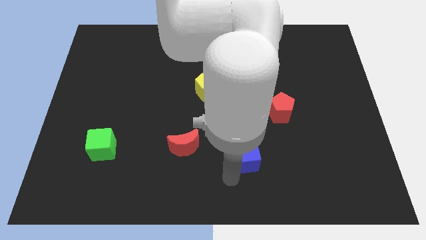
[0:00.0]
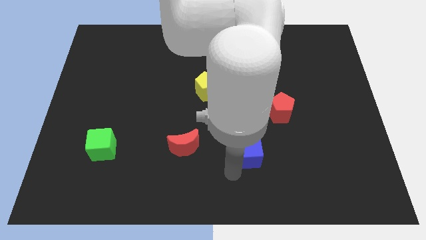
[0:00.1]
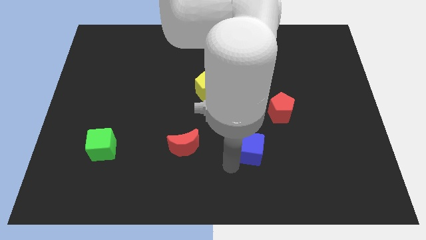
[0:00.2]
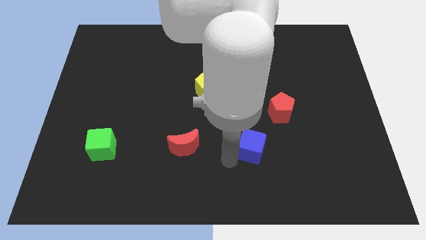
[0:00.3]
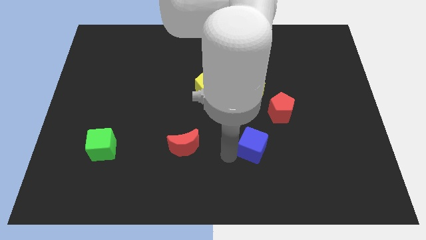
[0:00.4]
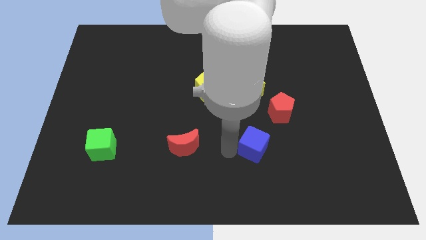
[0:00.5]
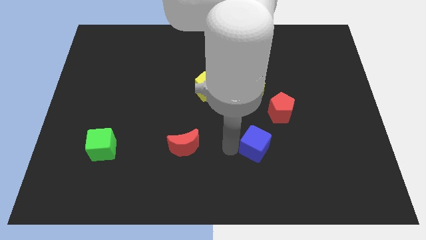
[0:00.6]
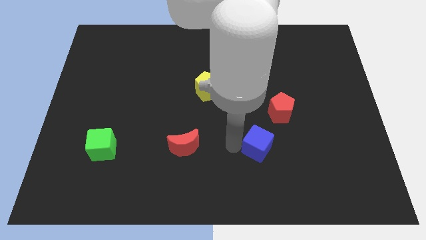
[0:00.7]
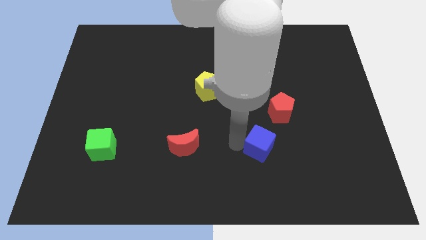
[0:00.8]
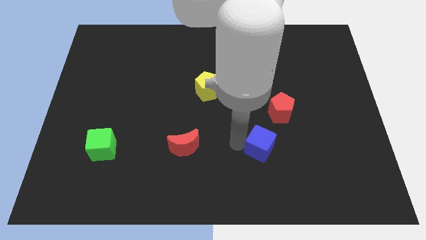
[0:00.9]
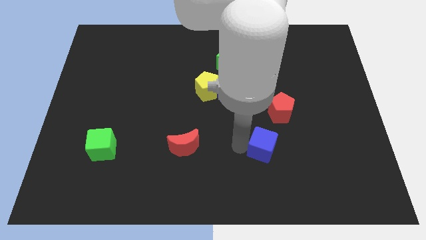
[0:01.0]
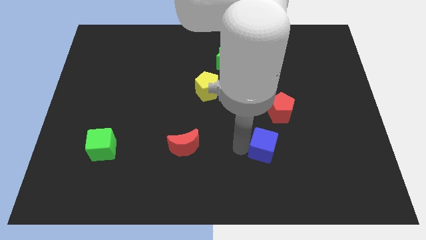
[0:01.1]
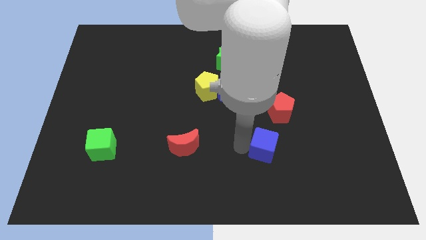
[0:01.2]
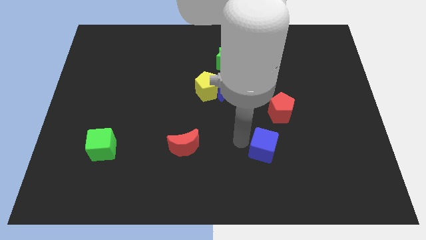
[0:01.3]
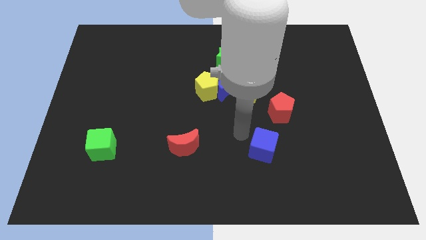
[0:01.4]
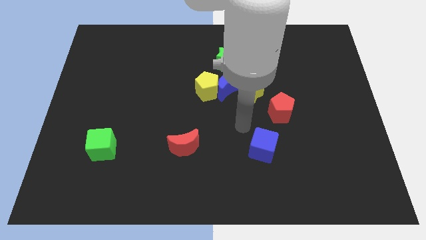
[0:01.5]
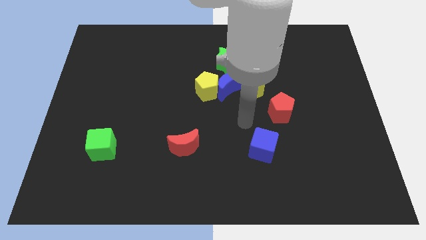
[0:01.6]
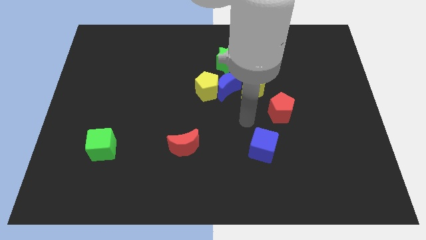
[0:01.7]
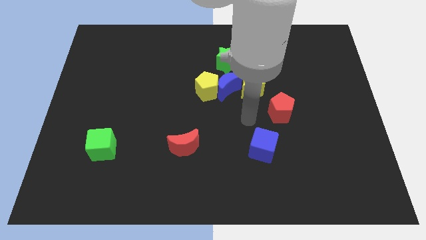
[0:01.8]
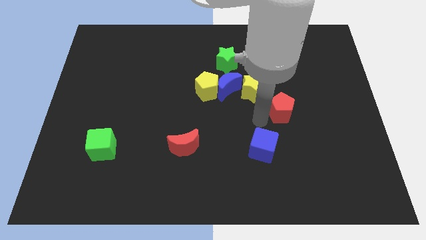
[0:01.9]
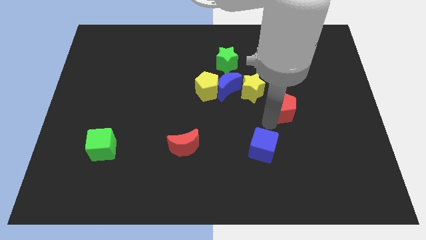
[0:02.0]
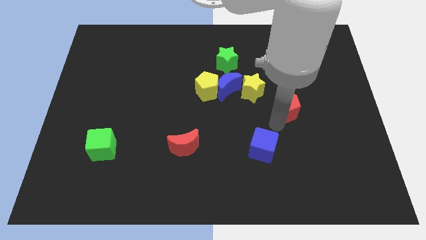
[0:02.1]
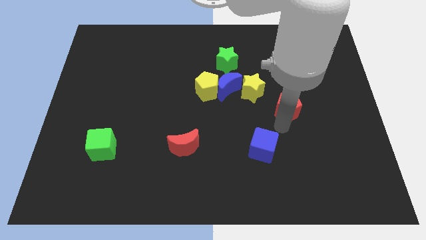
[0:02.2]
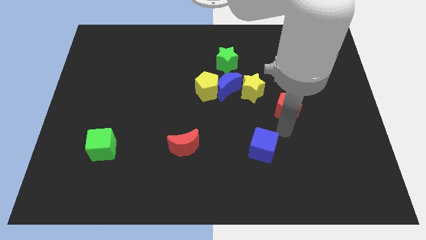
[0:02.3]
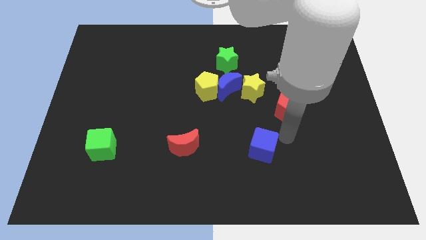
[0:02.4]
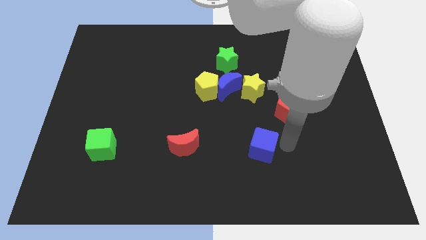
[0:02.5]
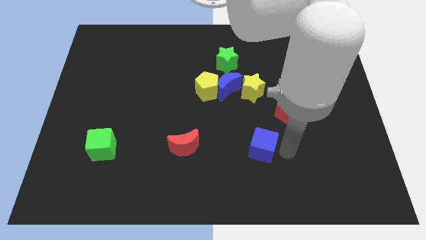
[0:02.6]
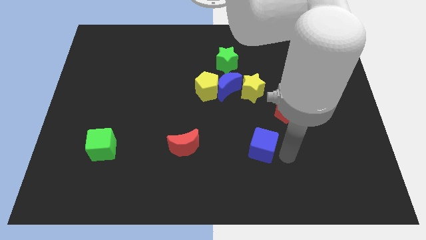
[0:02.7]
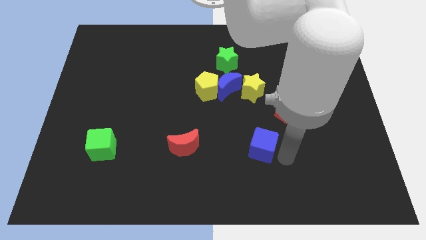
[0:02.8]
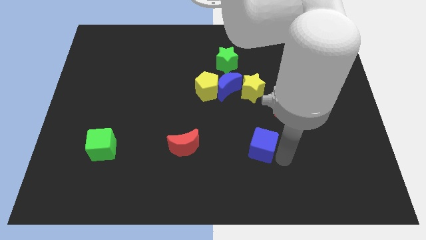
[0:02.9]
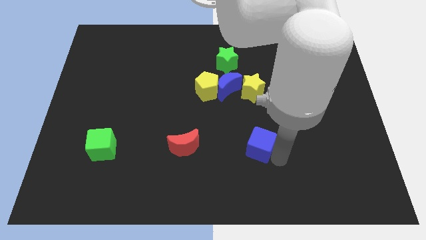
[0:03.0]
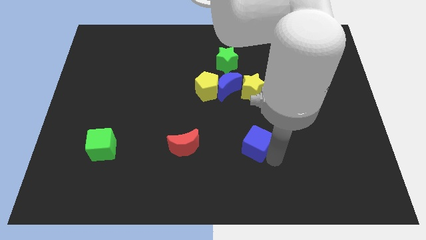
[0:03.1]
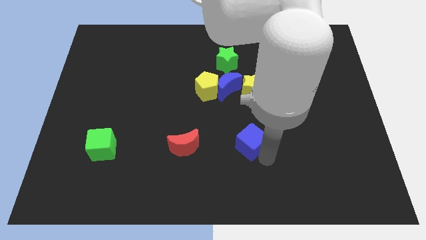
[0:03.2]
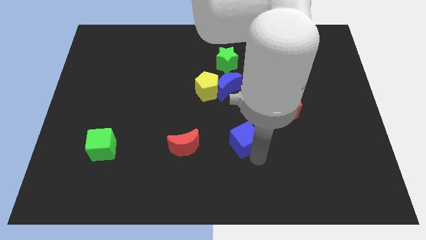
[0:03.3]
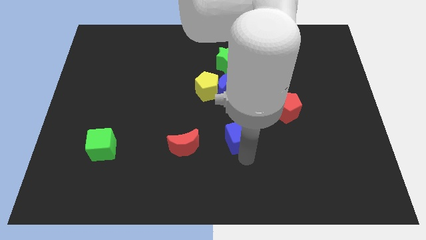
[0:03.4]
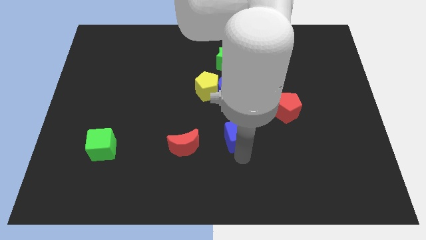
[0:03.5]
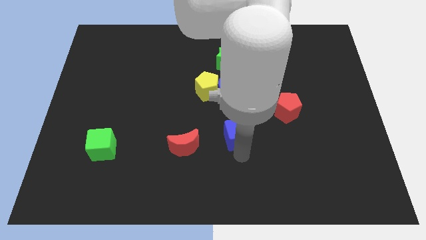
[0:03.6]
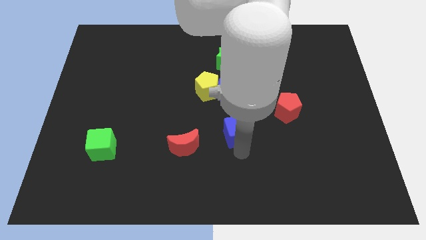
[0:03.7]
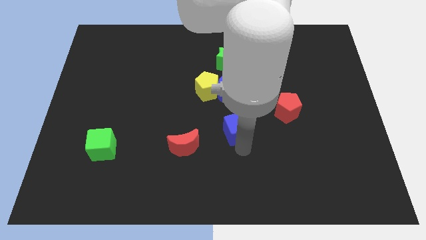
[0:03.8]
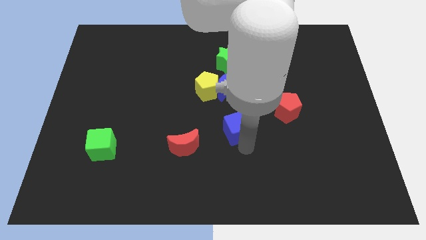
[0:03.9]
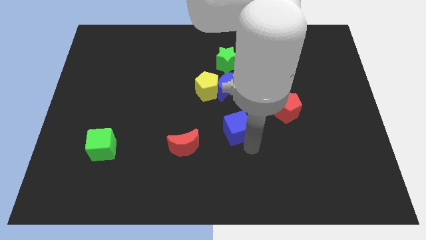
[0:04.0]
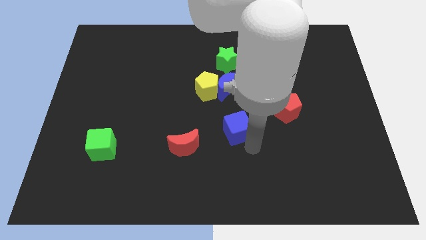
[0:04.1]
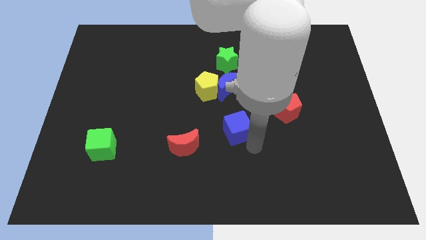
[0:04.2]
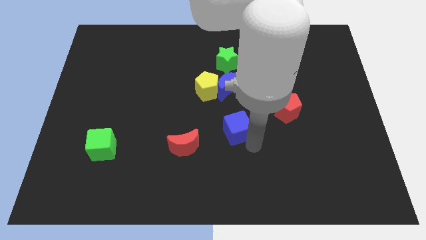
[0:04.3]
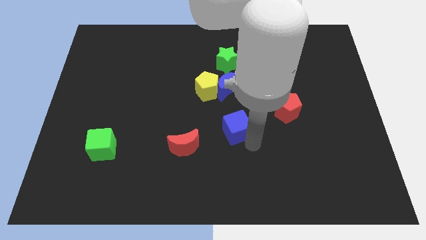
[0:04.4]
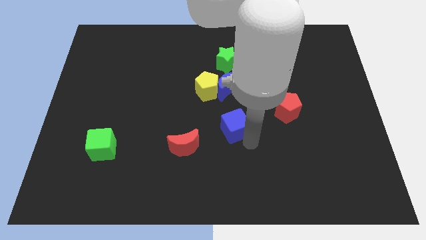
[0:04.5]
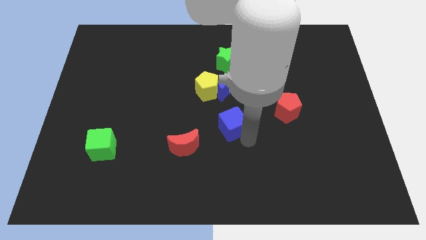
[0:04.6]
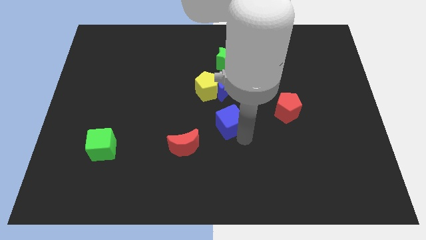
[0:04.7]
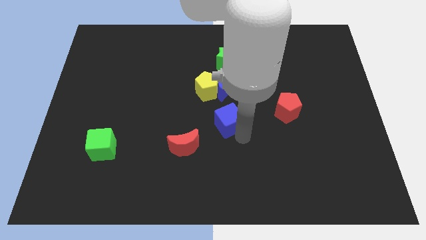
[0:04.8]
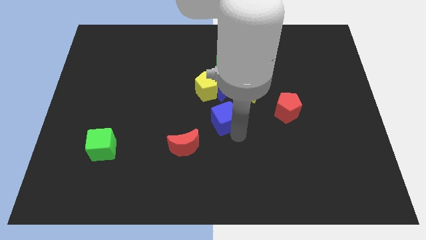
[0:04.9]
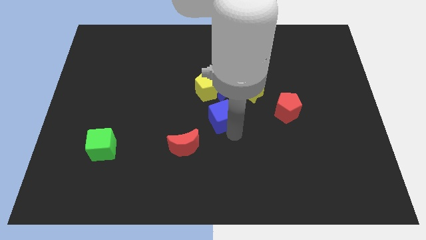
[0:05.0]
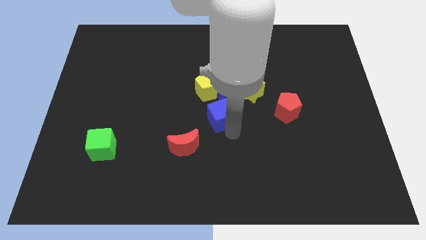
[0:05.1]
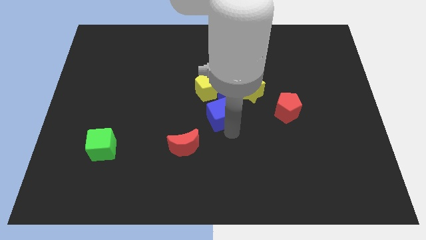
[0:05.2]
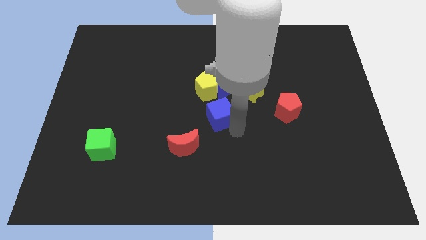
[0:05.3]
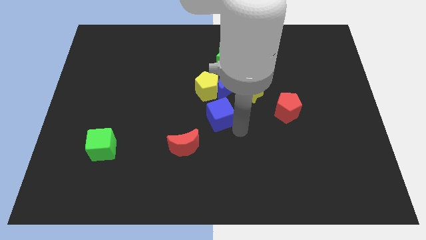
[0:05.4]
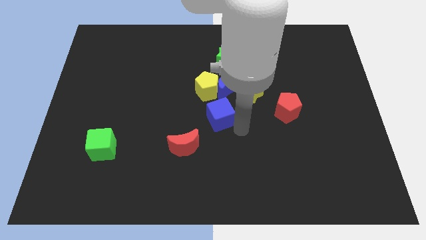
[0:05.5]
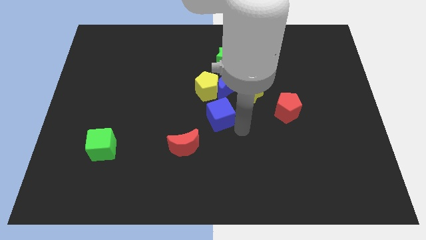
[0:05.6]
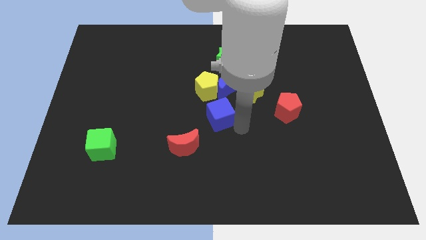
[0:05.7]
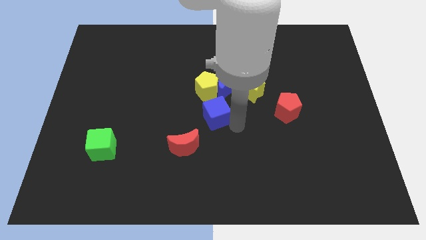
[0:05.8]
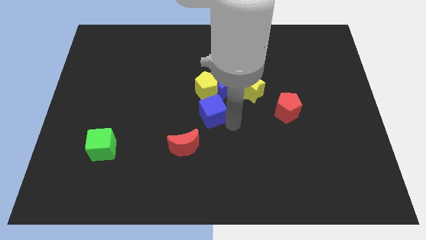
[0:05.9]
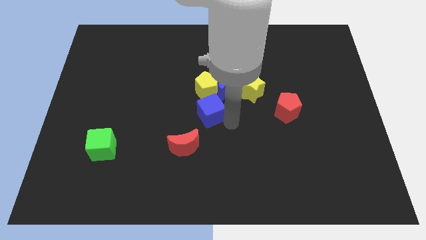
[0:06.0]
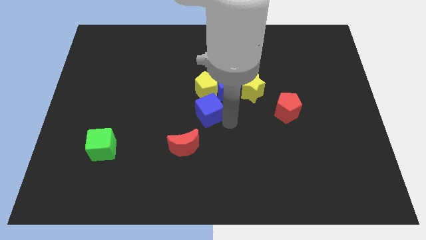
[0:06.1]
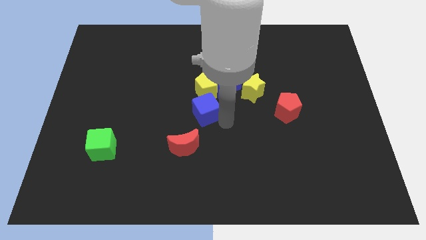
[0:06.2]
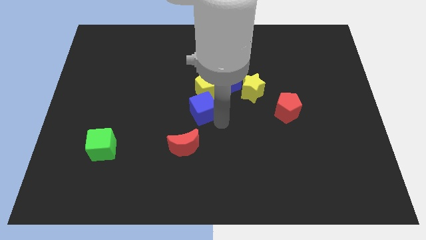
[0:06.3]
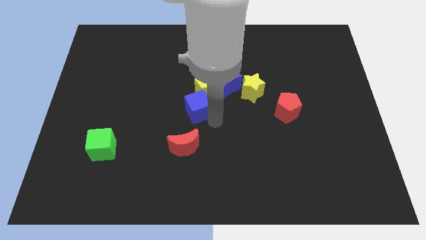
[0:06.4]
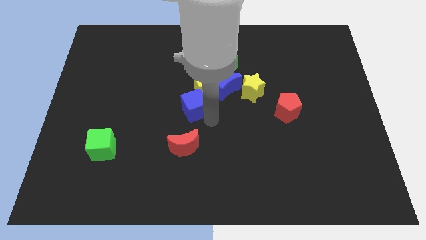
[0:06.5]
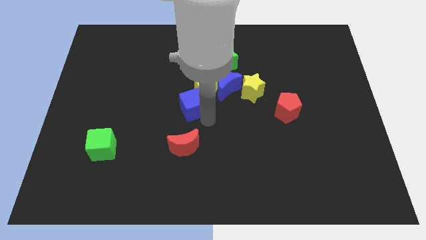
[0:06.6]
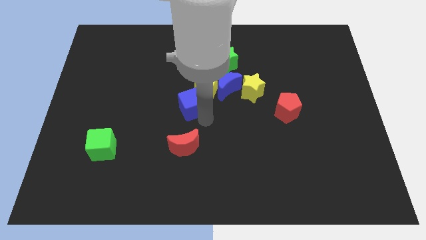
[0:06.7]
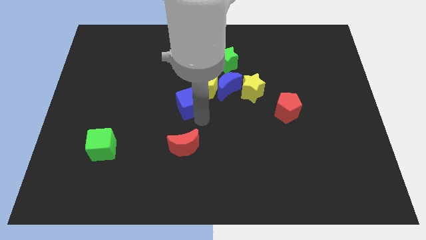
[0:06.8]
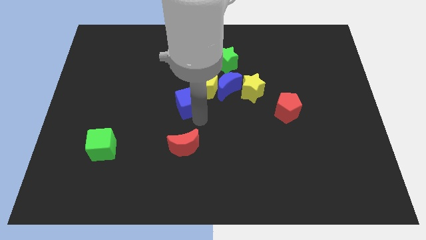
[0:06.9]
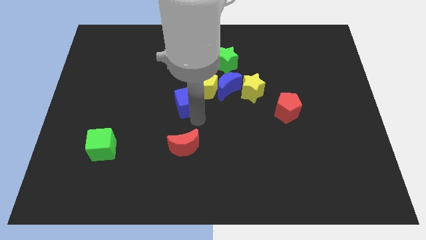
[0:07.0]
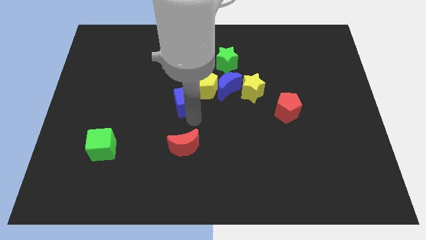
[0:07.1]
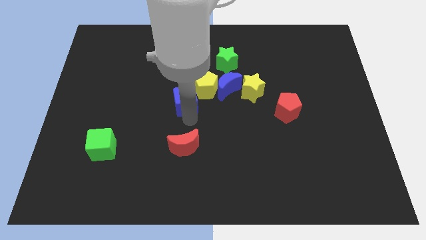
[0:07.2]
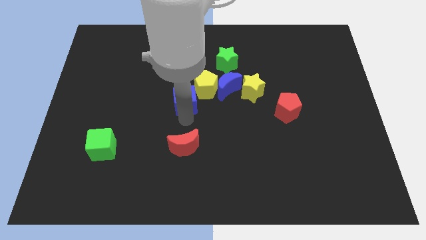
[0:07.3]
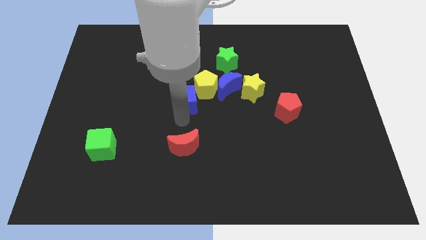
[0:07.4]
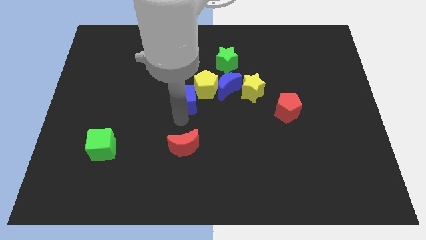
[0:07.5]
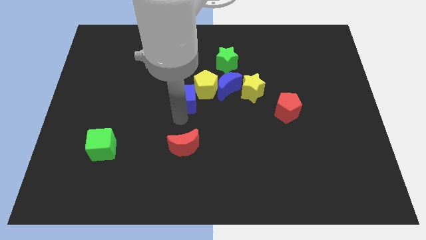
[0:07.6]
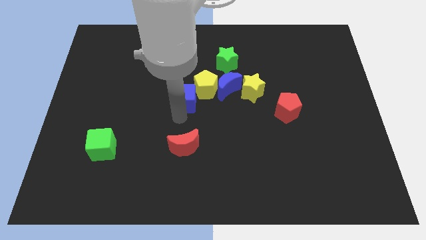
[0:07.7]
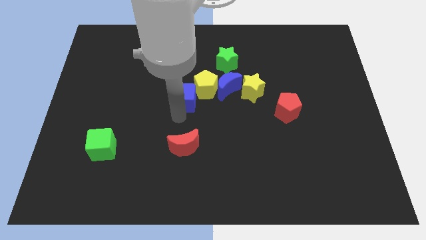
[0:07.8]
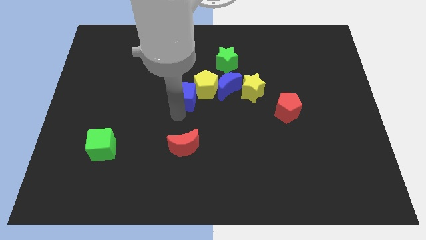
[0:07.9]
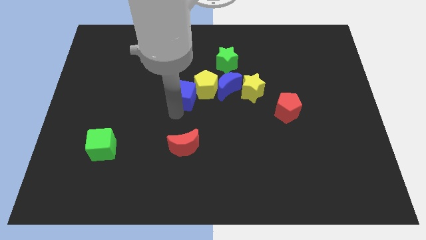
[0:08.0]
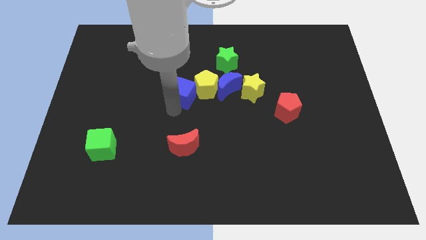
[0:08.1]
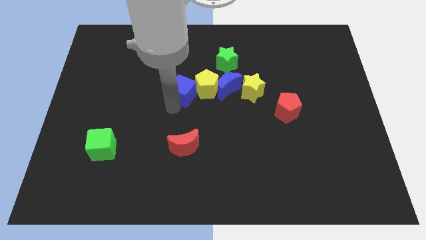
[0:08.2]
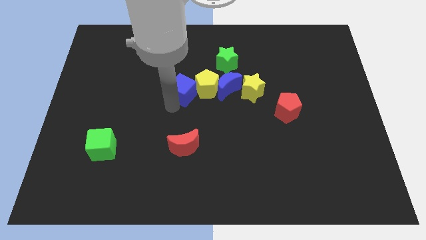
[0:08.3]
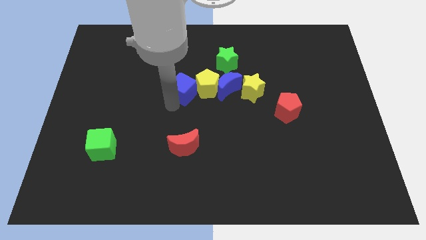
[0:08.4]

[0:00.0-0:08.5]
move the blue cube to the left of the yellow pentagon

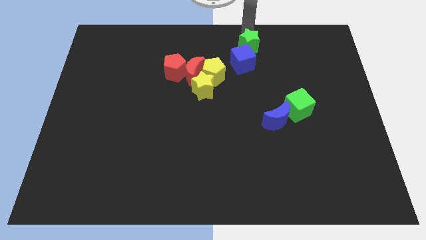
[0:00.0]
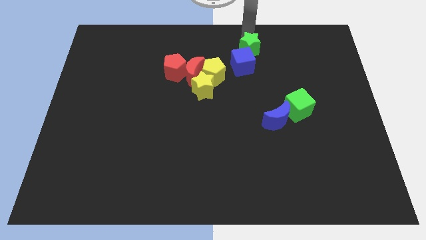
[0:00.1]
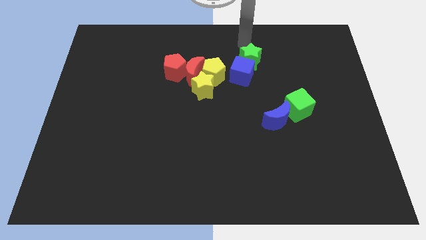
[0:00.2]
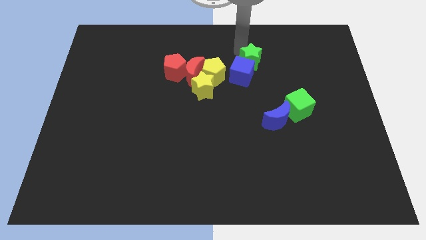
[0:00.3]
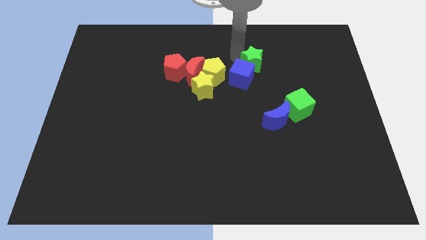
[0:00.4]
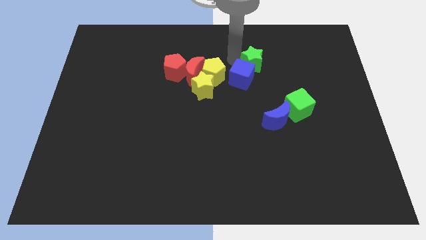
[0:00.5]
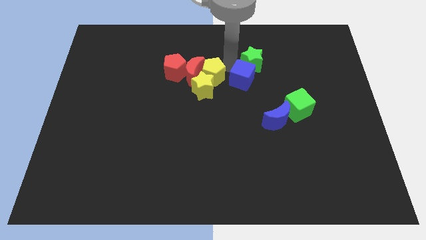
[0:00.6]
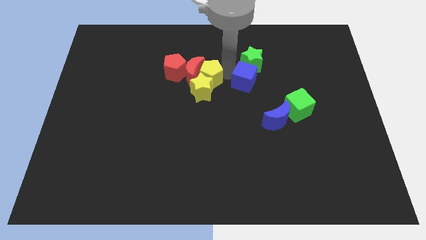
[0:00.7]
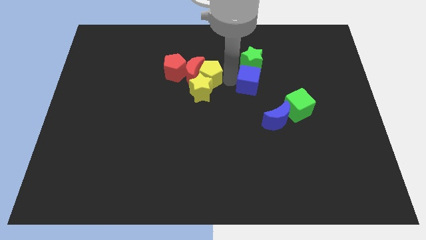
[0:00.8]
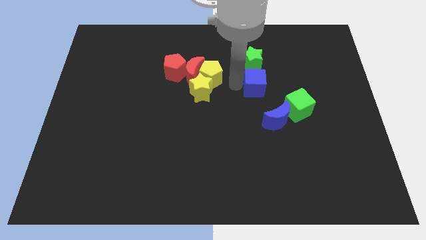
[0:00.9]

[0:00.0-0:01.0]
put your arm in between the yellow pentagon and blue cube
